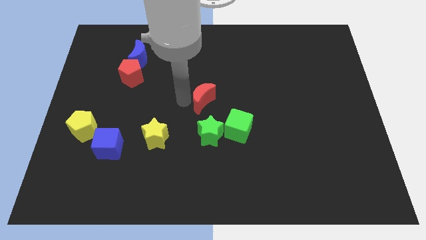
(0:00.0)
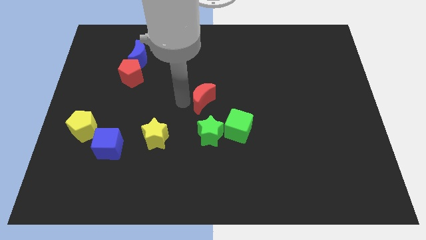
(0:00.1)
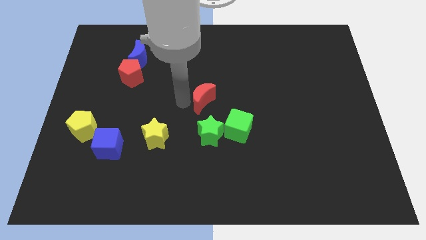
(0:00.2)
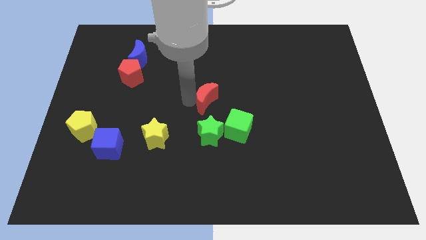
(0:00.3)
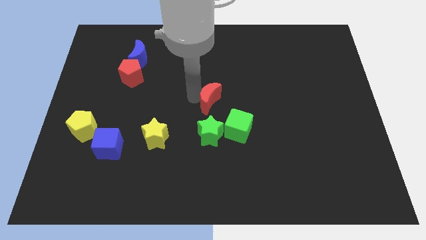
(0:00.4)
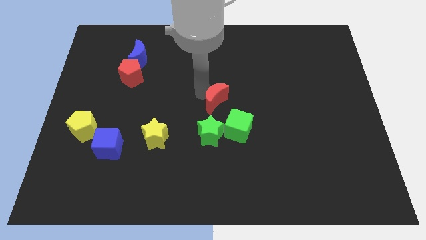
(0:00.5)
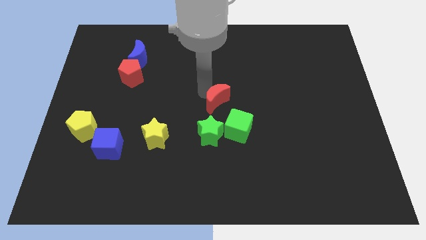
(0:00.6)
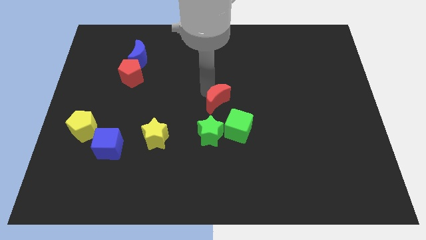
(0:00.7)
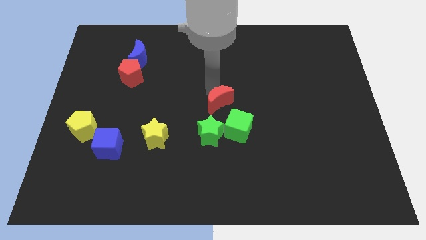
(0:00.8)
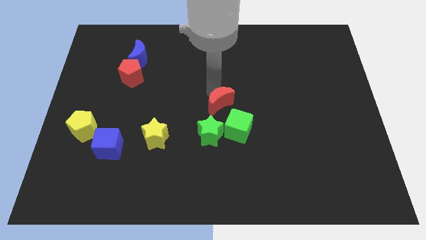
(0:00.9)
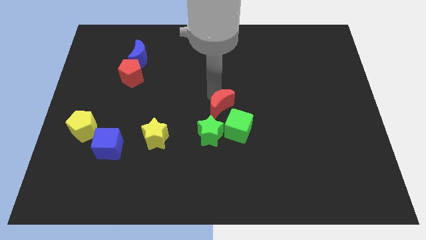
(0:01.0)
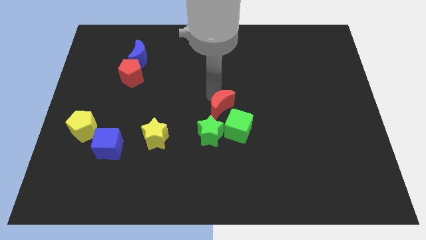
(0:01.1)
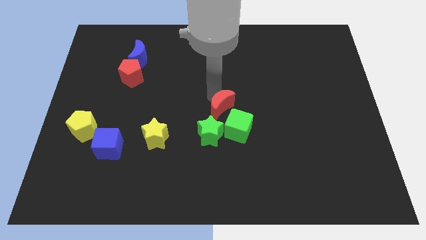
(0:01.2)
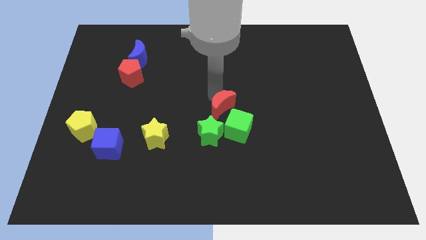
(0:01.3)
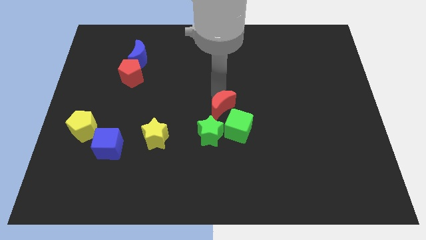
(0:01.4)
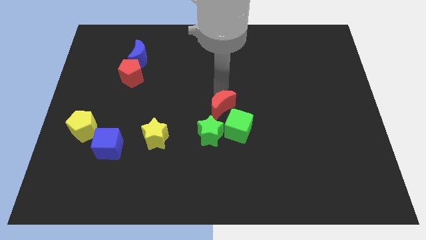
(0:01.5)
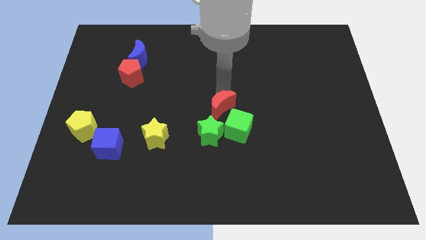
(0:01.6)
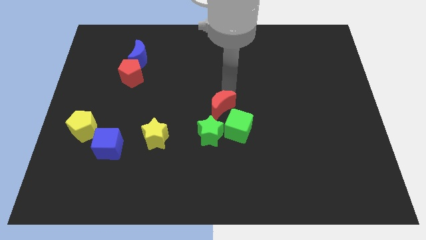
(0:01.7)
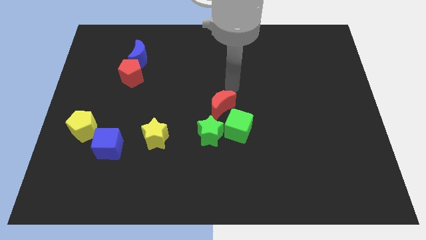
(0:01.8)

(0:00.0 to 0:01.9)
place the red crescent above the green blocks

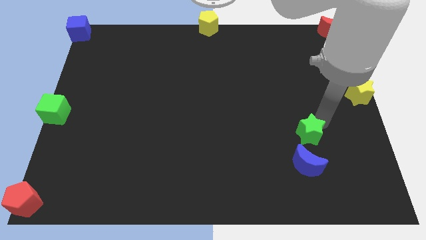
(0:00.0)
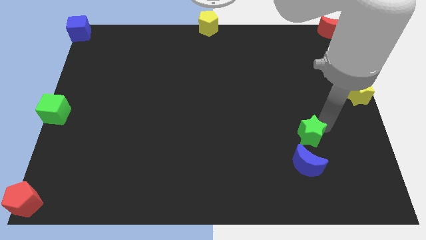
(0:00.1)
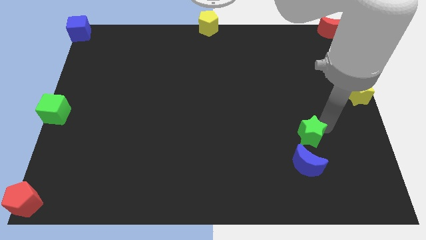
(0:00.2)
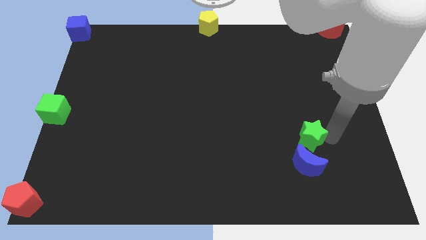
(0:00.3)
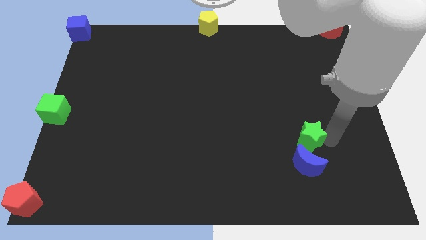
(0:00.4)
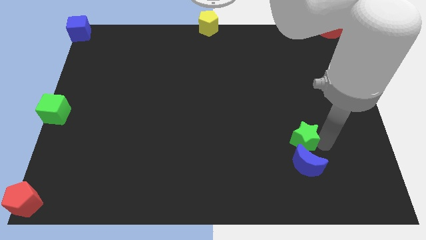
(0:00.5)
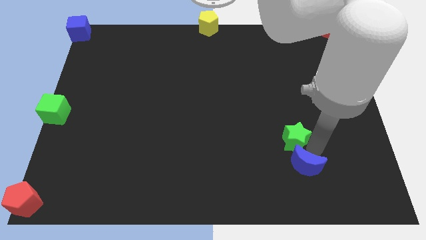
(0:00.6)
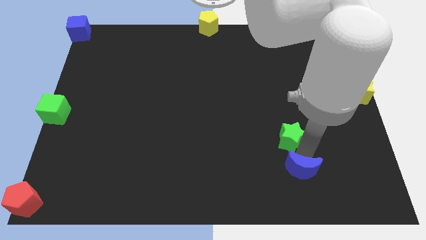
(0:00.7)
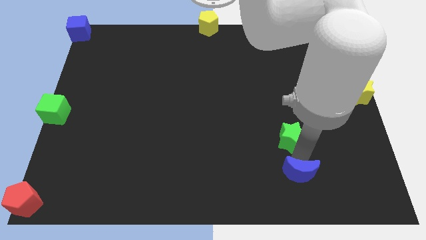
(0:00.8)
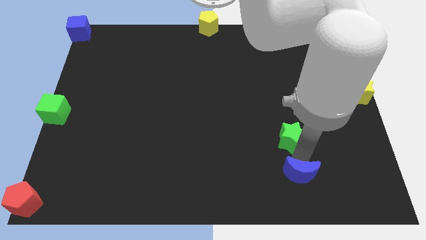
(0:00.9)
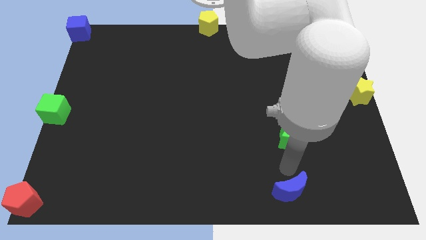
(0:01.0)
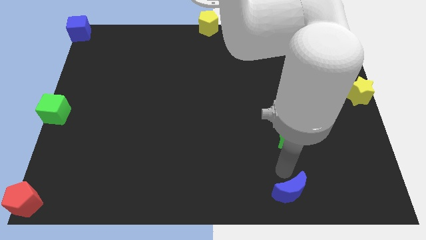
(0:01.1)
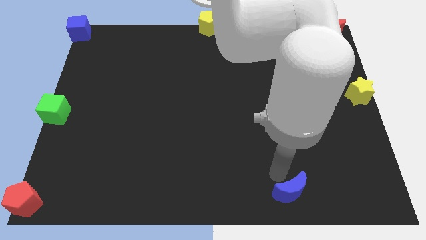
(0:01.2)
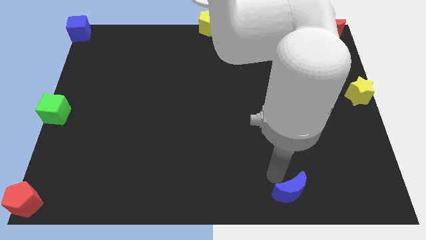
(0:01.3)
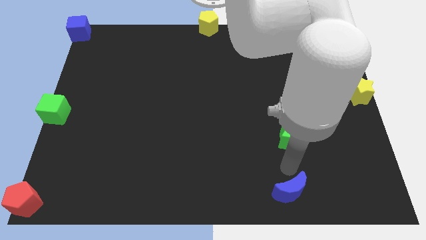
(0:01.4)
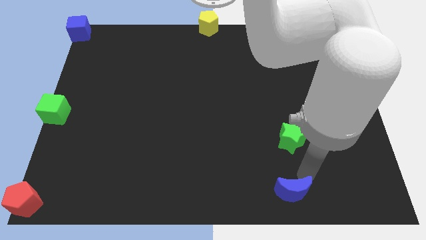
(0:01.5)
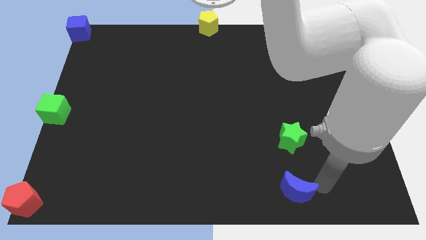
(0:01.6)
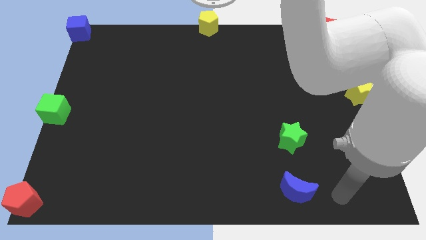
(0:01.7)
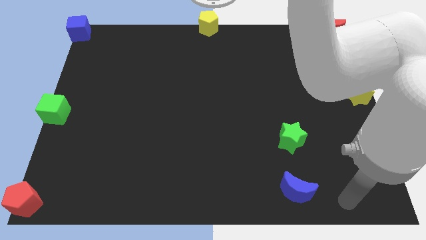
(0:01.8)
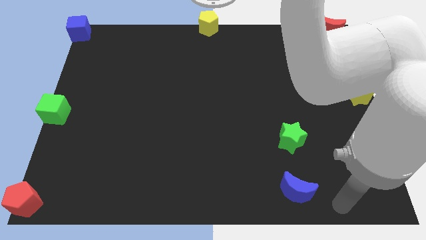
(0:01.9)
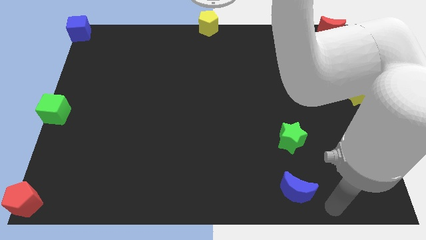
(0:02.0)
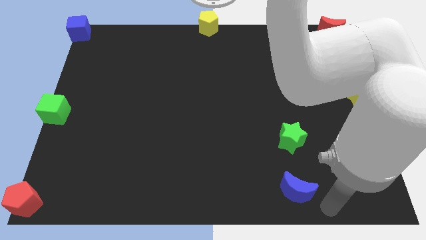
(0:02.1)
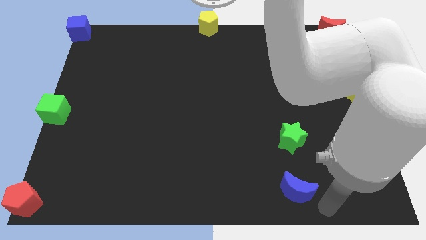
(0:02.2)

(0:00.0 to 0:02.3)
separate the green star and blue moon

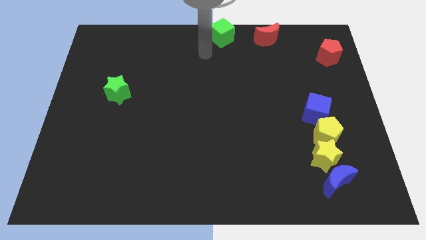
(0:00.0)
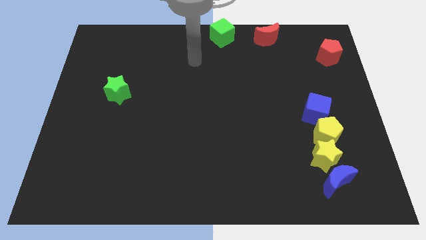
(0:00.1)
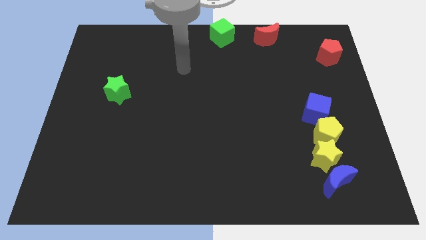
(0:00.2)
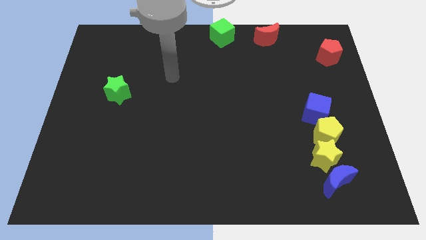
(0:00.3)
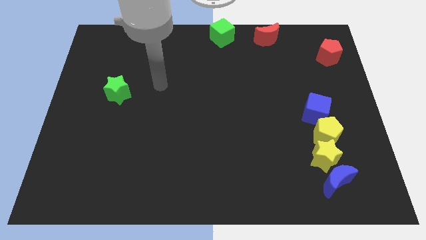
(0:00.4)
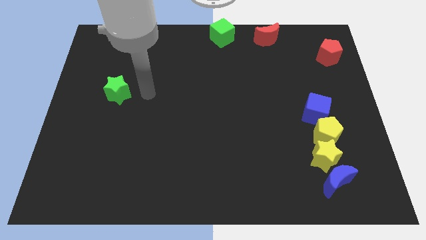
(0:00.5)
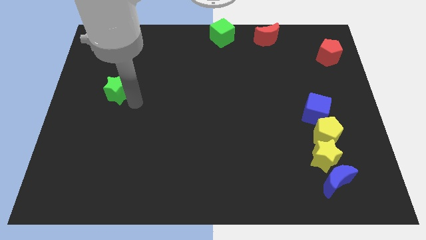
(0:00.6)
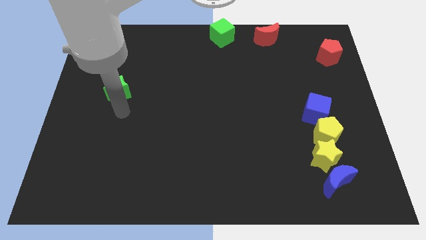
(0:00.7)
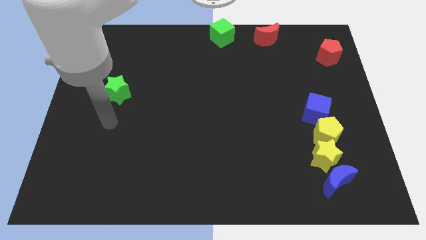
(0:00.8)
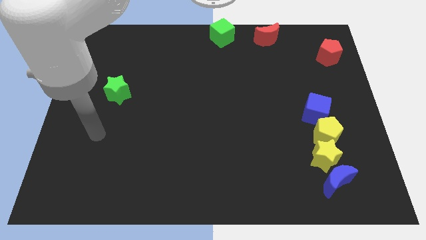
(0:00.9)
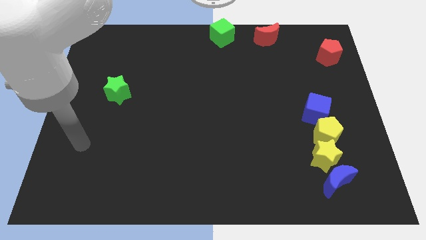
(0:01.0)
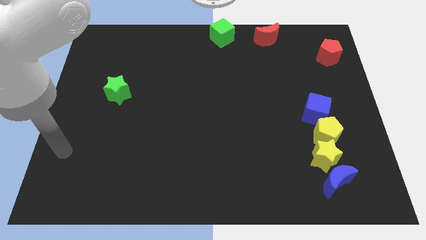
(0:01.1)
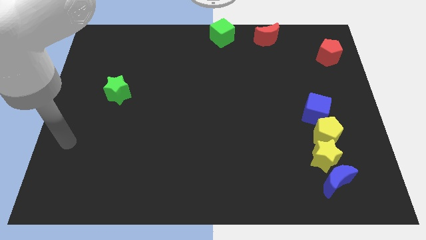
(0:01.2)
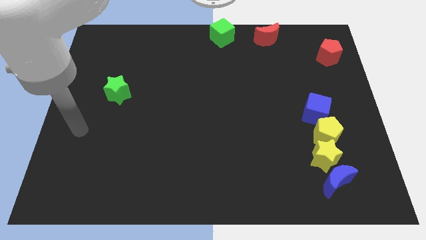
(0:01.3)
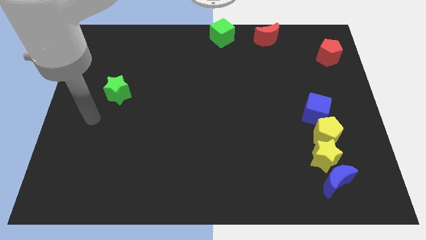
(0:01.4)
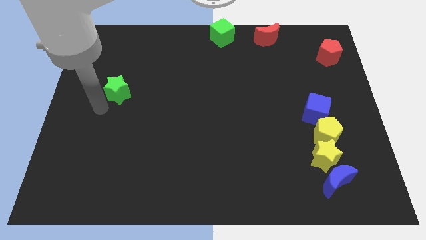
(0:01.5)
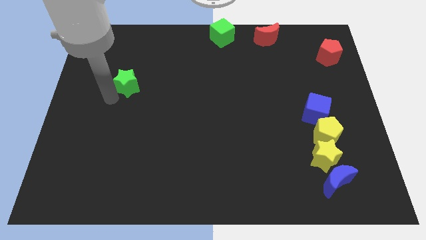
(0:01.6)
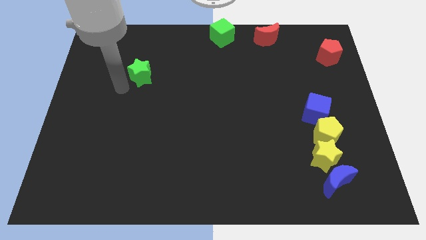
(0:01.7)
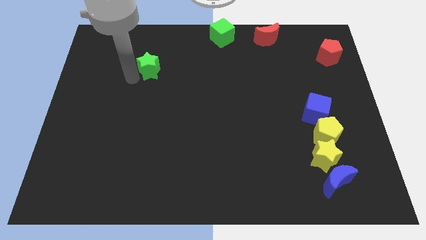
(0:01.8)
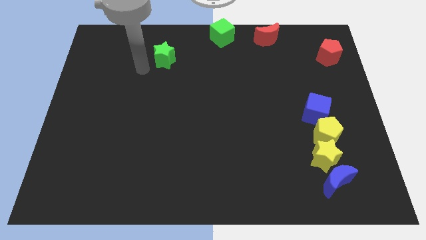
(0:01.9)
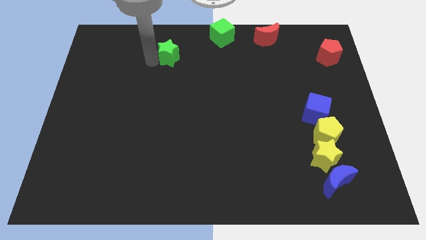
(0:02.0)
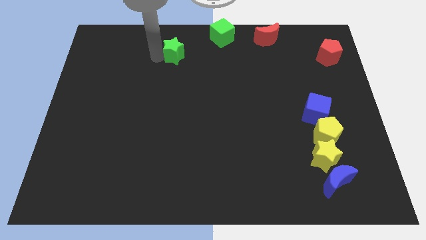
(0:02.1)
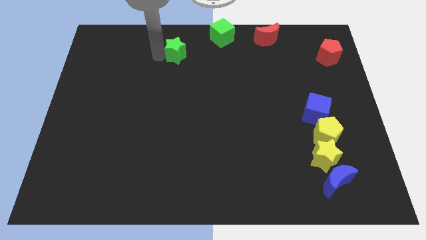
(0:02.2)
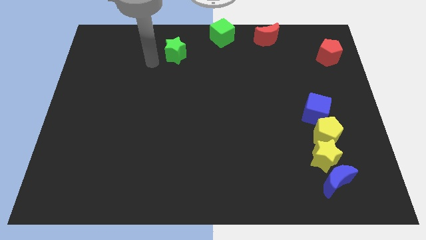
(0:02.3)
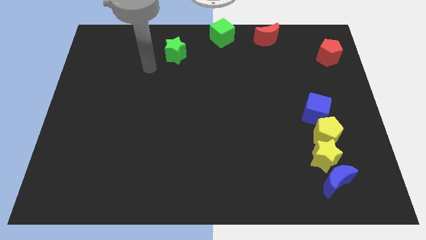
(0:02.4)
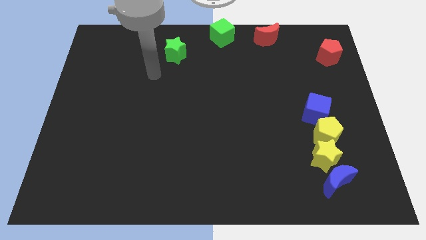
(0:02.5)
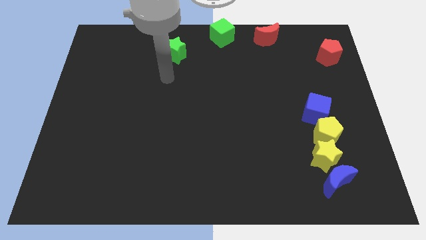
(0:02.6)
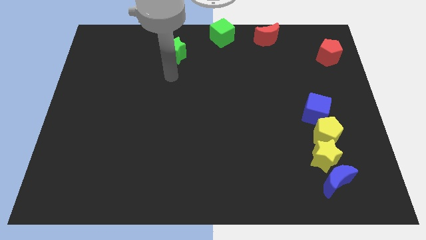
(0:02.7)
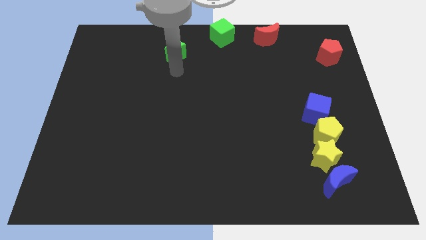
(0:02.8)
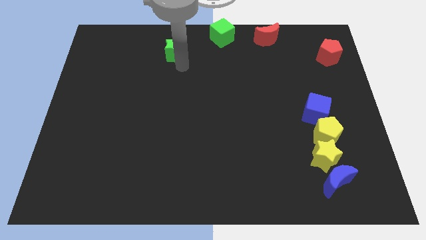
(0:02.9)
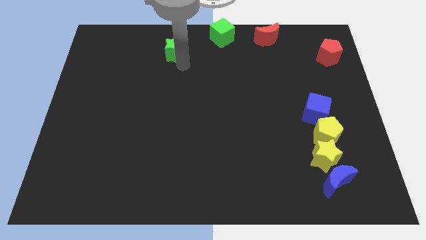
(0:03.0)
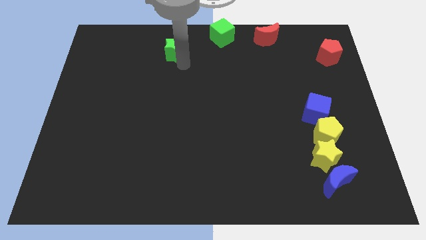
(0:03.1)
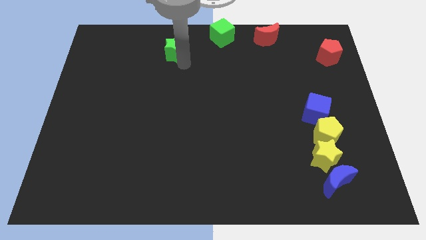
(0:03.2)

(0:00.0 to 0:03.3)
push the green star to the bottom left of the green cube

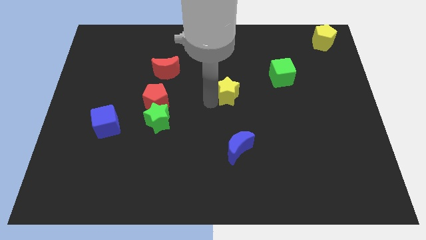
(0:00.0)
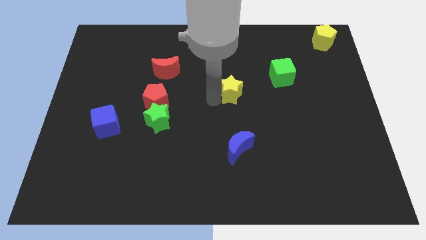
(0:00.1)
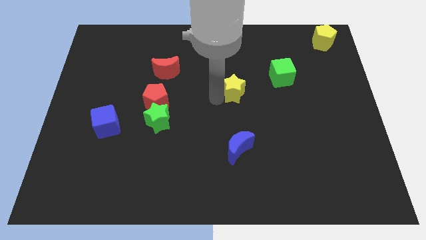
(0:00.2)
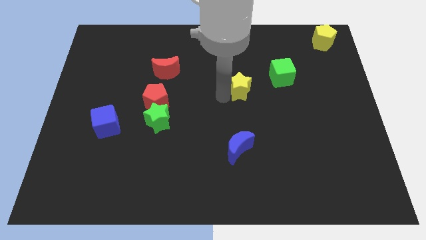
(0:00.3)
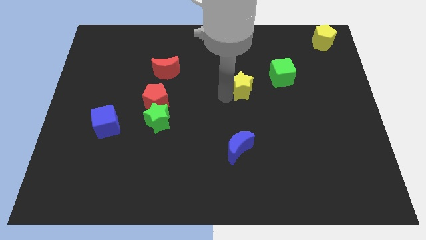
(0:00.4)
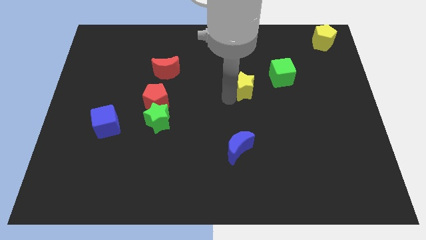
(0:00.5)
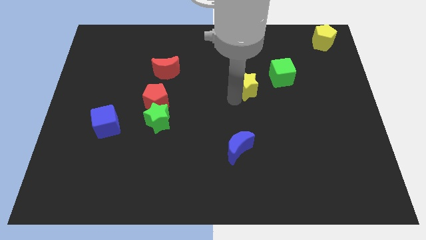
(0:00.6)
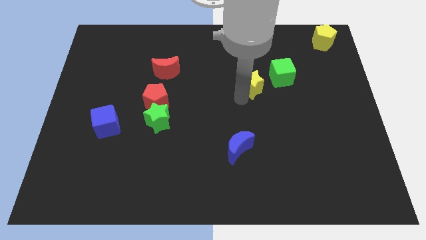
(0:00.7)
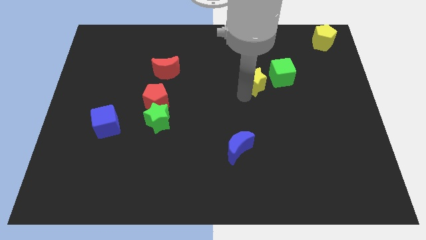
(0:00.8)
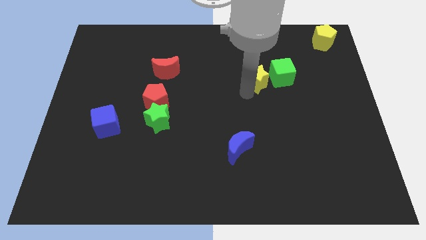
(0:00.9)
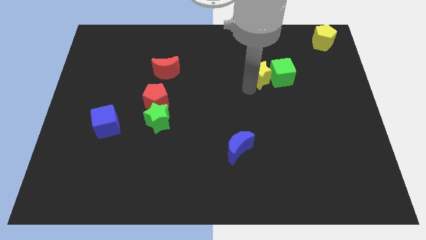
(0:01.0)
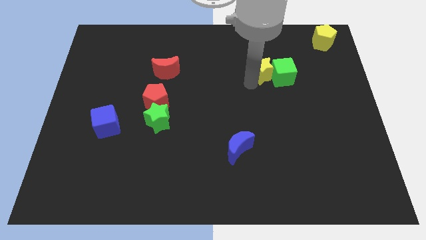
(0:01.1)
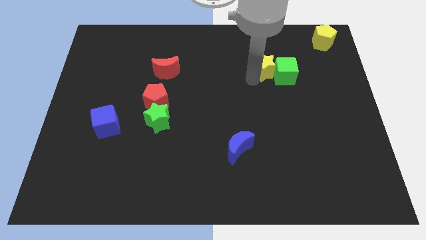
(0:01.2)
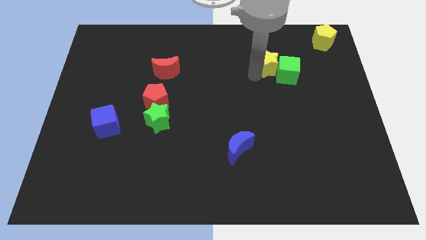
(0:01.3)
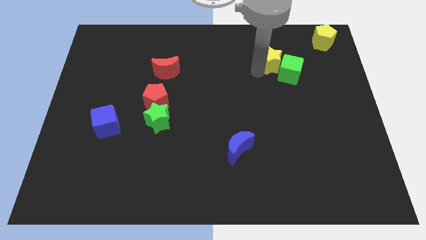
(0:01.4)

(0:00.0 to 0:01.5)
push the yellow star into the green cube

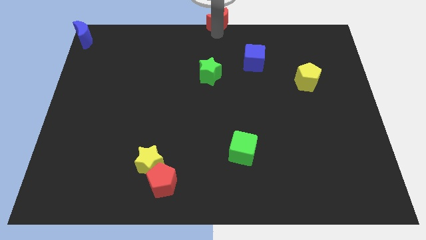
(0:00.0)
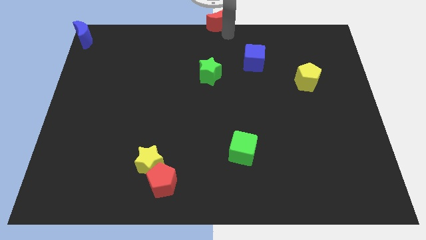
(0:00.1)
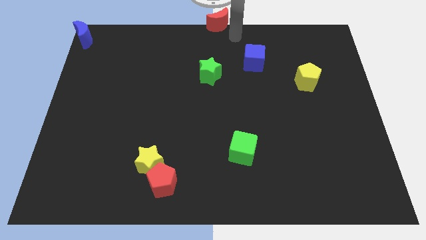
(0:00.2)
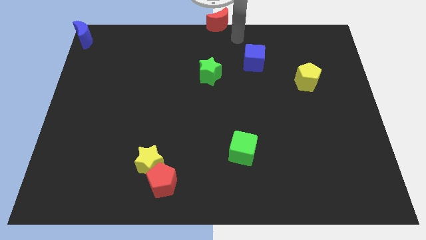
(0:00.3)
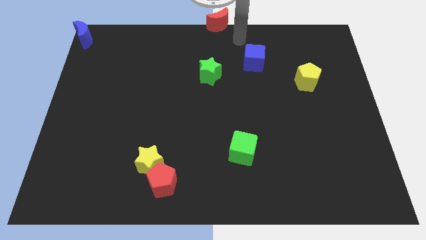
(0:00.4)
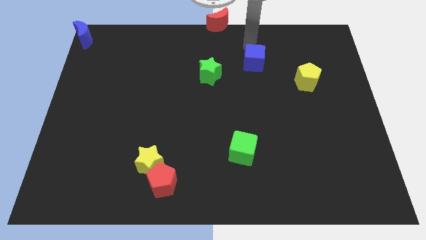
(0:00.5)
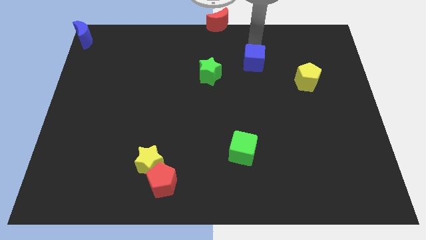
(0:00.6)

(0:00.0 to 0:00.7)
point your arm at the top of blue cube
